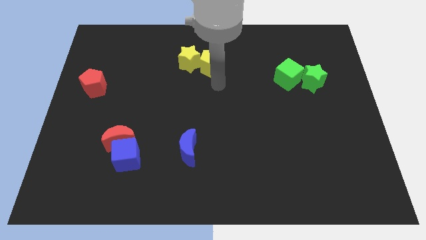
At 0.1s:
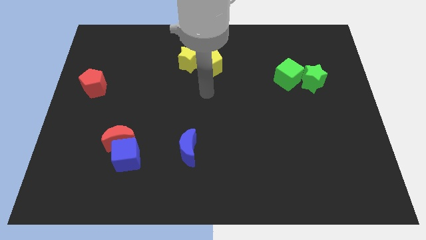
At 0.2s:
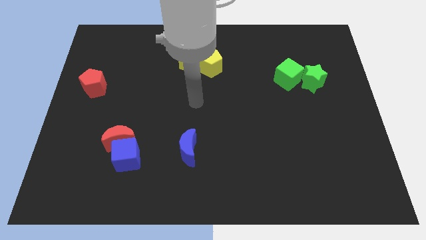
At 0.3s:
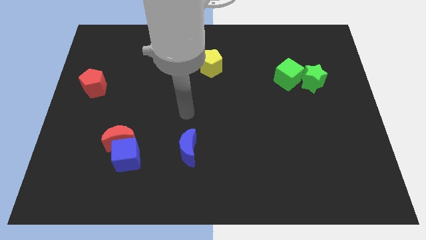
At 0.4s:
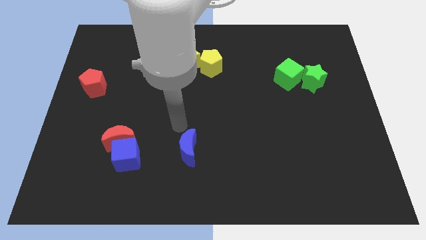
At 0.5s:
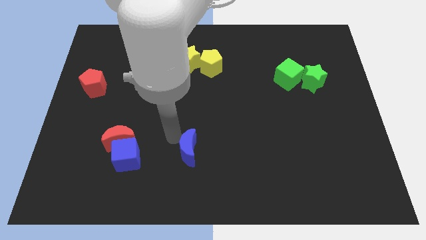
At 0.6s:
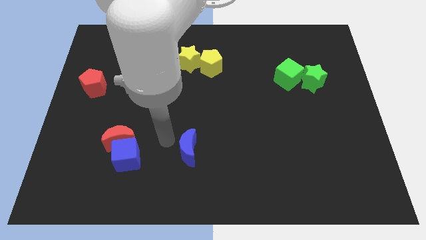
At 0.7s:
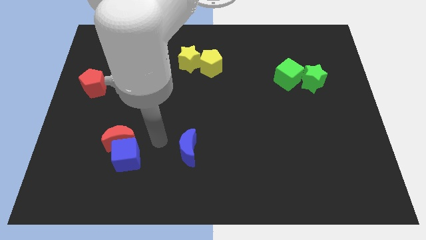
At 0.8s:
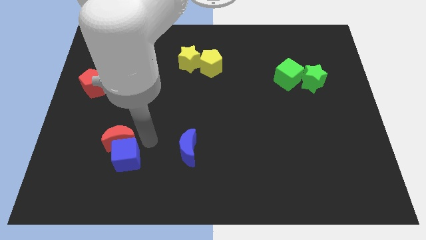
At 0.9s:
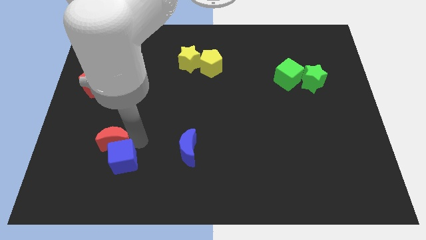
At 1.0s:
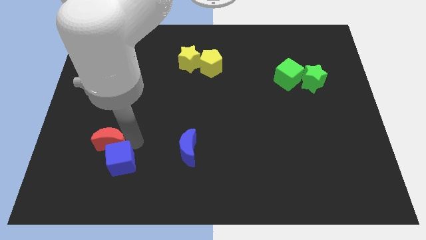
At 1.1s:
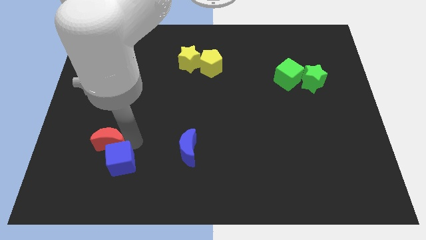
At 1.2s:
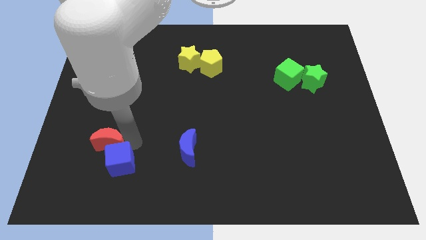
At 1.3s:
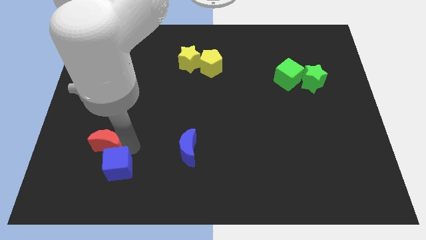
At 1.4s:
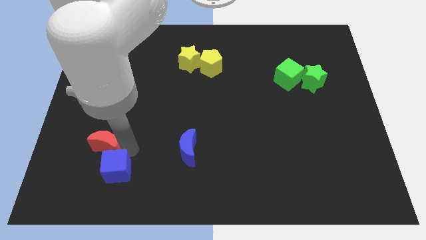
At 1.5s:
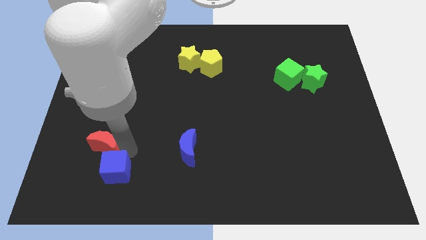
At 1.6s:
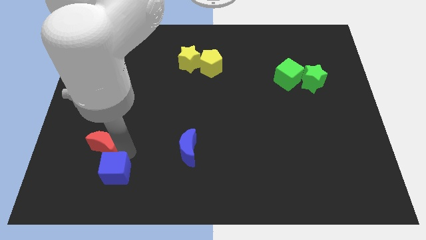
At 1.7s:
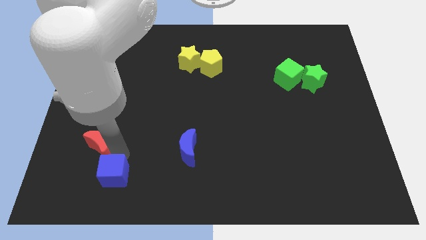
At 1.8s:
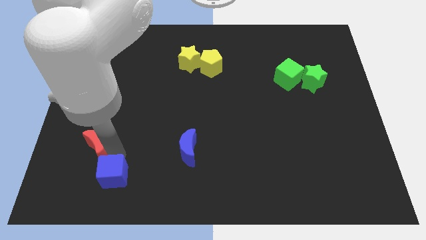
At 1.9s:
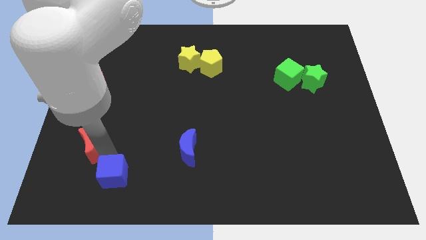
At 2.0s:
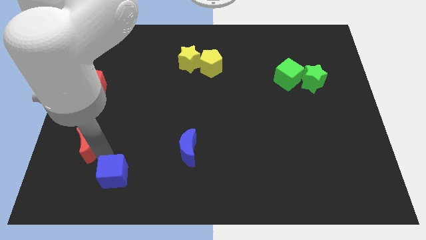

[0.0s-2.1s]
separate the blue cube and the red crescent

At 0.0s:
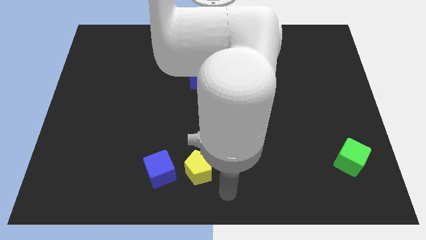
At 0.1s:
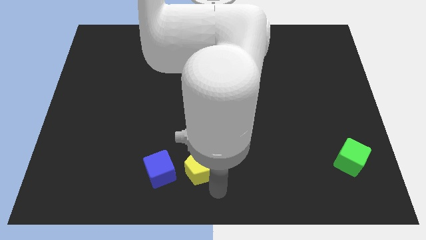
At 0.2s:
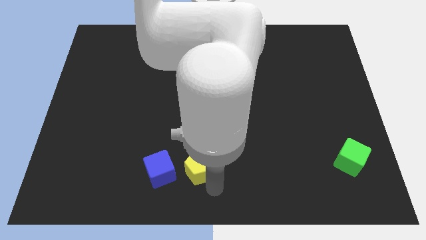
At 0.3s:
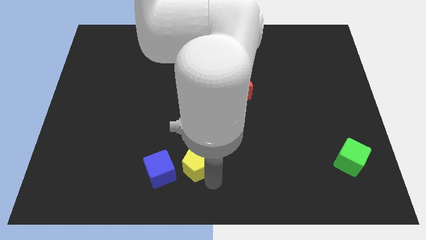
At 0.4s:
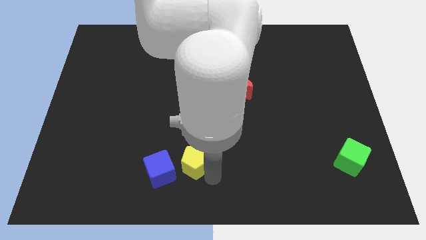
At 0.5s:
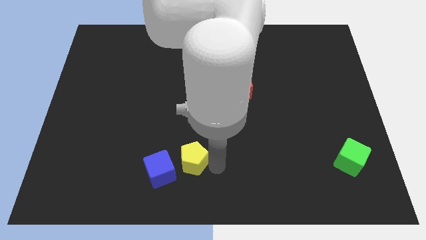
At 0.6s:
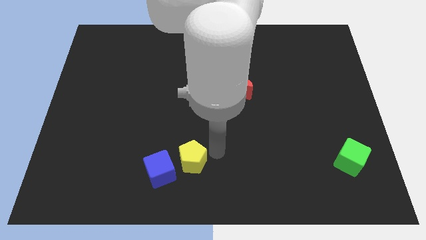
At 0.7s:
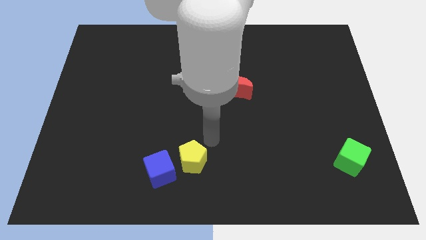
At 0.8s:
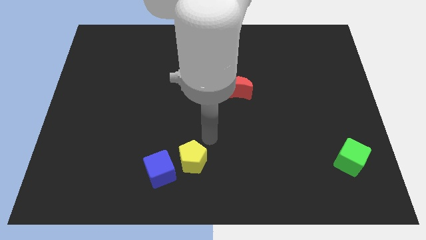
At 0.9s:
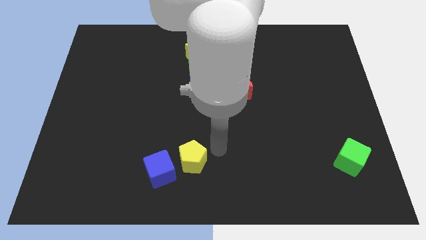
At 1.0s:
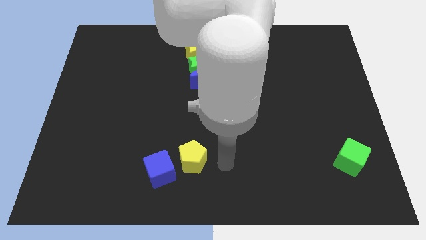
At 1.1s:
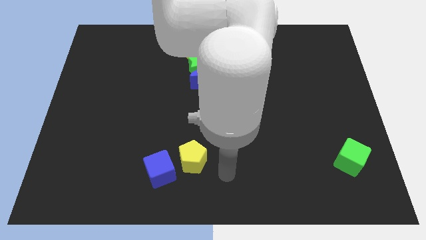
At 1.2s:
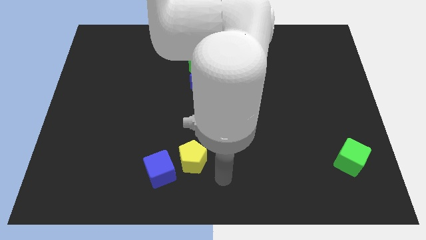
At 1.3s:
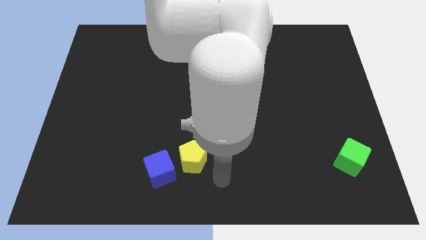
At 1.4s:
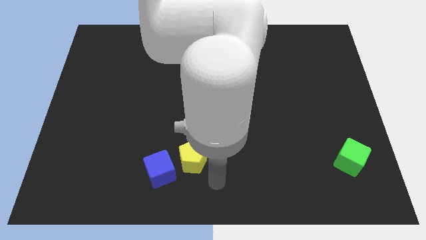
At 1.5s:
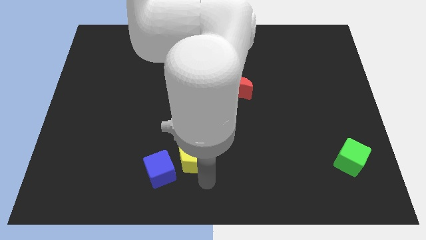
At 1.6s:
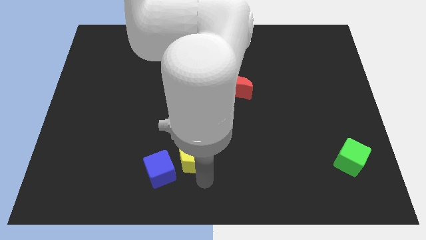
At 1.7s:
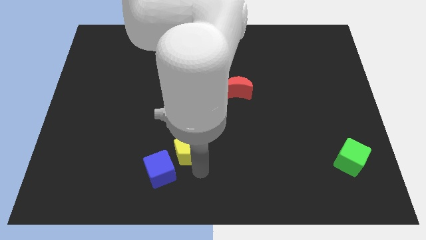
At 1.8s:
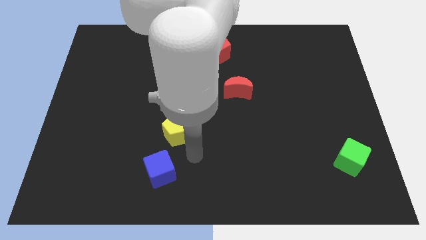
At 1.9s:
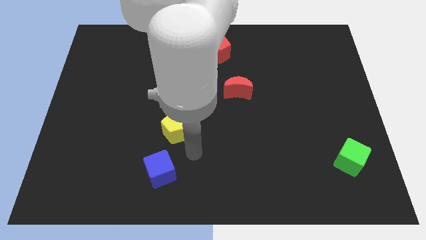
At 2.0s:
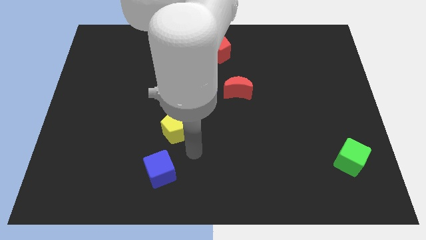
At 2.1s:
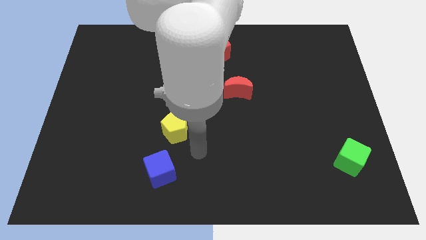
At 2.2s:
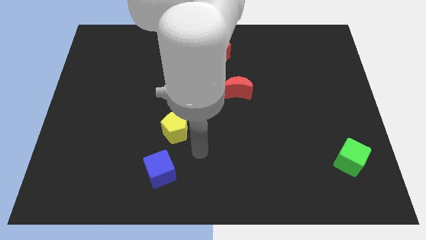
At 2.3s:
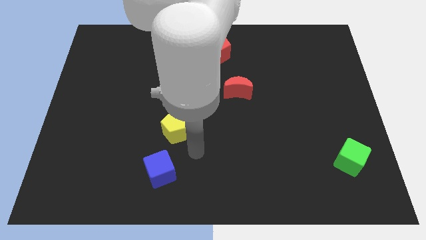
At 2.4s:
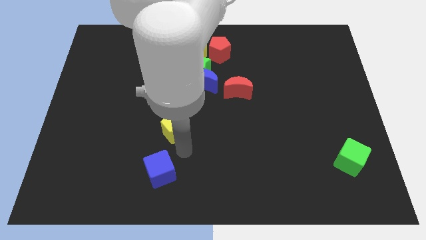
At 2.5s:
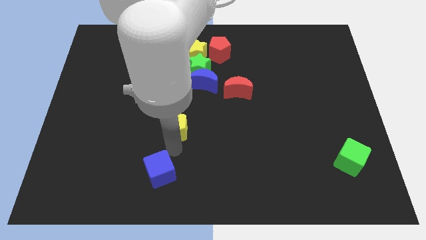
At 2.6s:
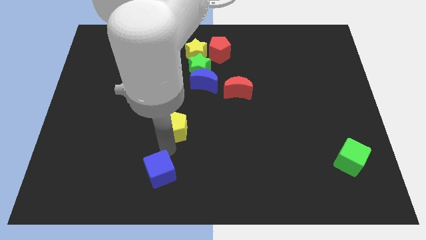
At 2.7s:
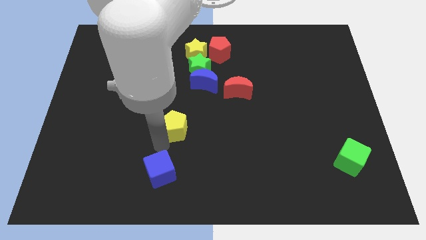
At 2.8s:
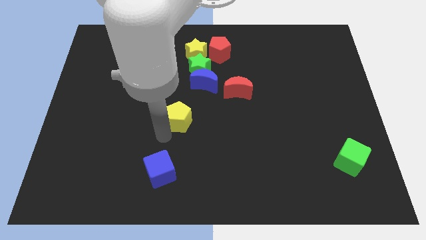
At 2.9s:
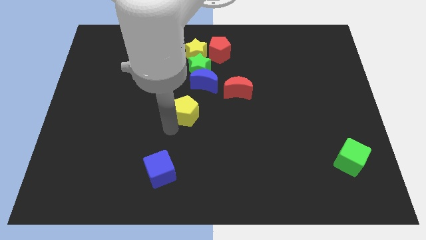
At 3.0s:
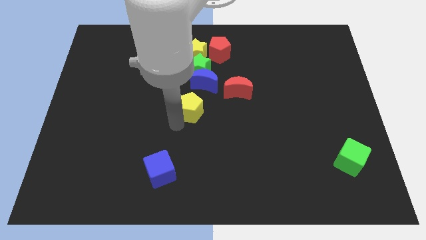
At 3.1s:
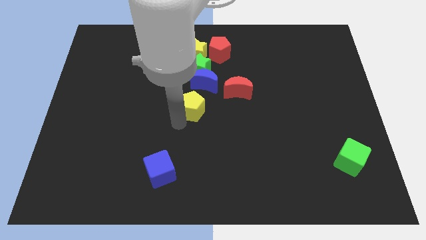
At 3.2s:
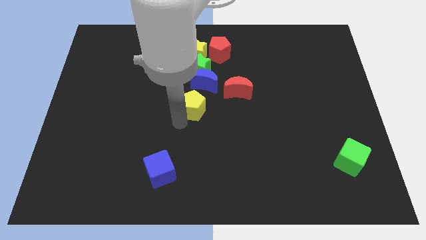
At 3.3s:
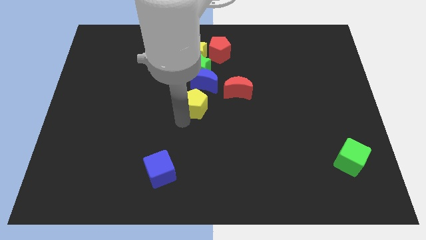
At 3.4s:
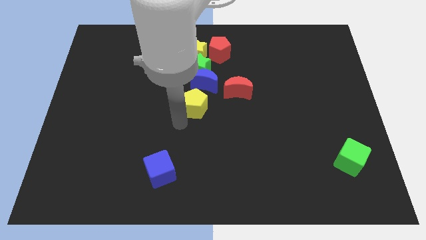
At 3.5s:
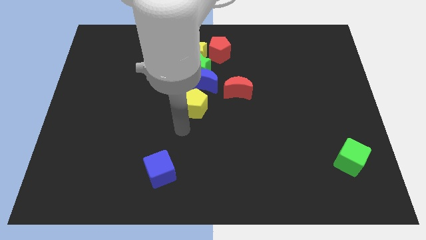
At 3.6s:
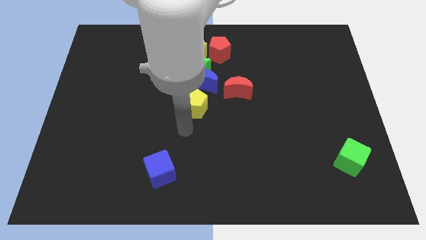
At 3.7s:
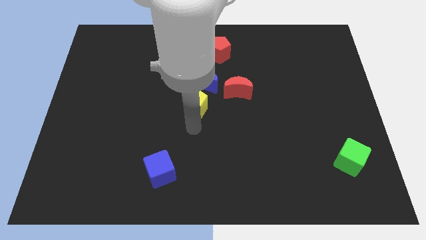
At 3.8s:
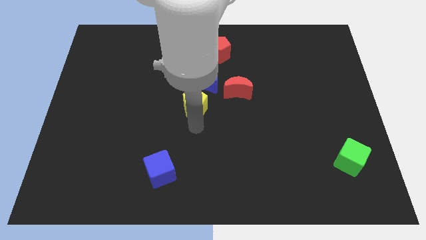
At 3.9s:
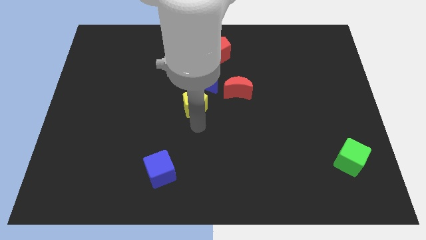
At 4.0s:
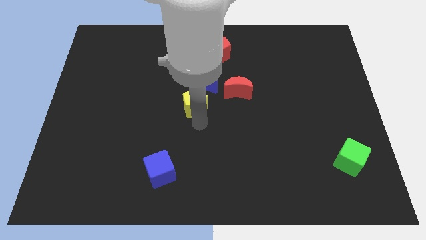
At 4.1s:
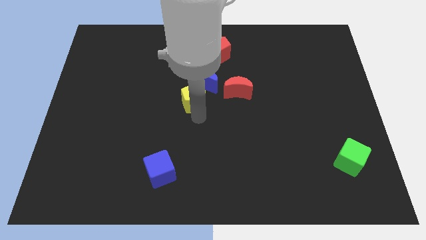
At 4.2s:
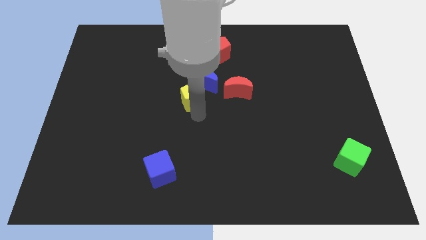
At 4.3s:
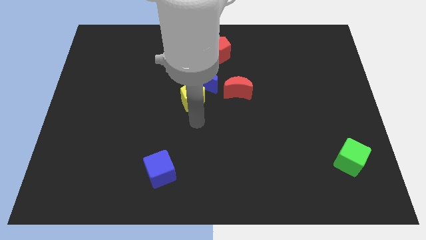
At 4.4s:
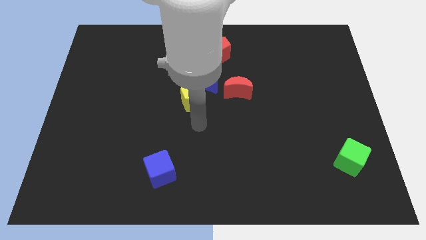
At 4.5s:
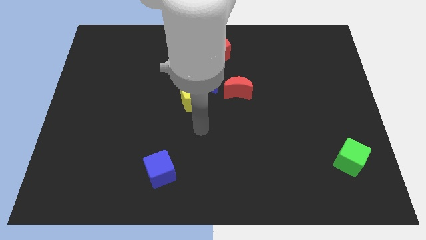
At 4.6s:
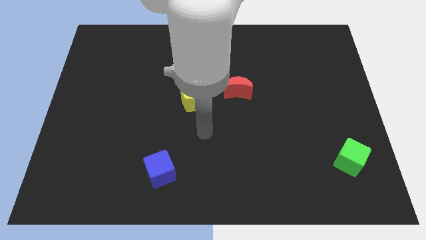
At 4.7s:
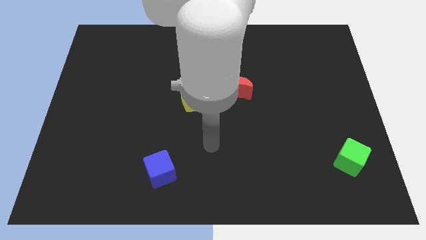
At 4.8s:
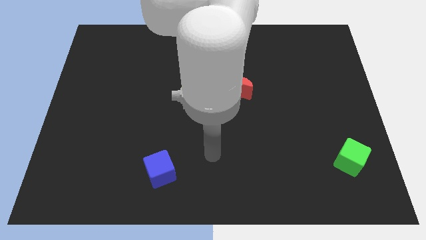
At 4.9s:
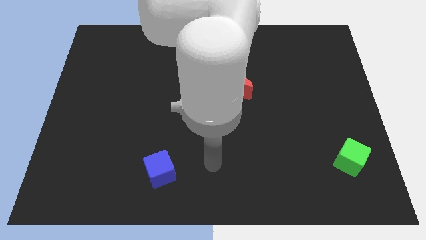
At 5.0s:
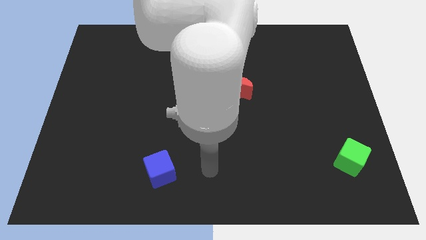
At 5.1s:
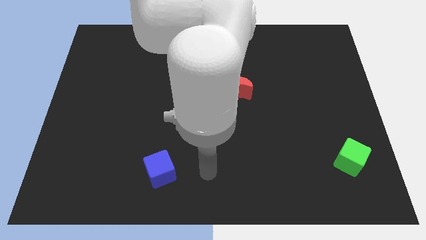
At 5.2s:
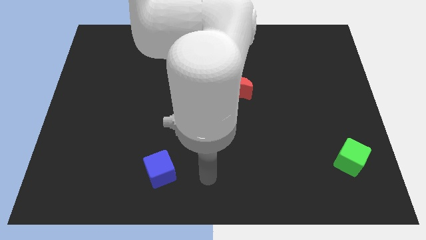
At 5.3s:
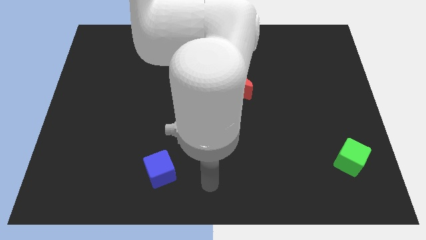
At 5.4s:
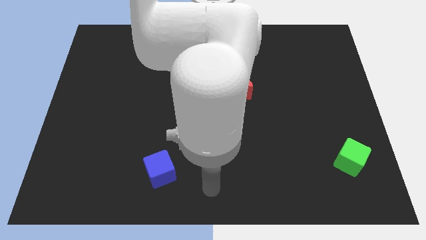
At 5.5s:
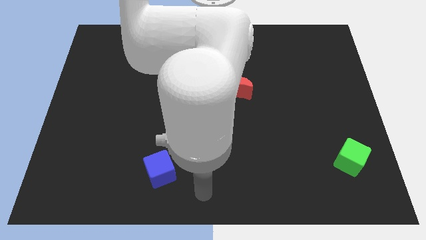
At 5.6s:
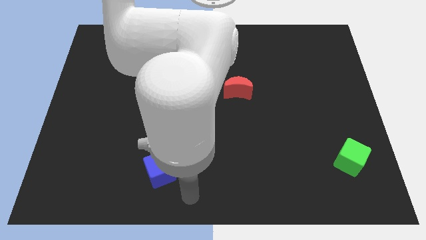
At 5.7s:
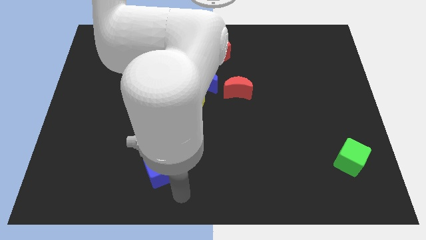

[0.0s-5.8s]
place yellow pentagon close to blue crescent

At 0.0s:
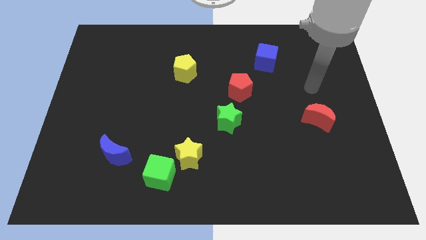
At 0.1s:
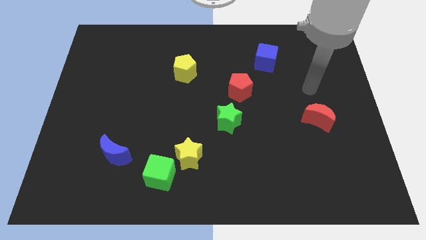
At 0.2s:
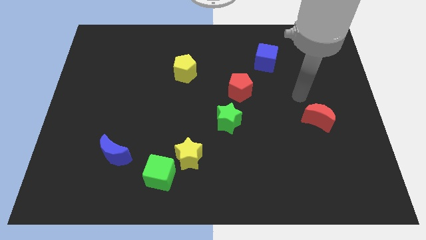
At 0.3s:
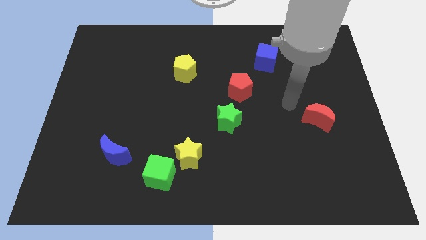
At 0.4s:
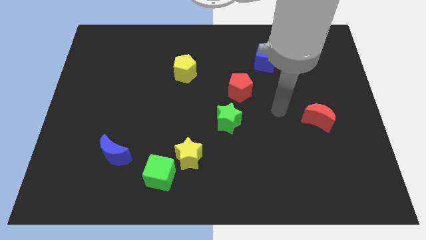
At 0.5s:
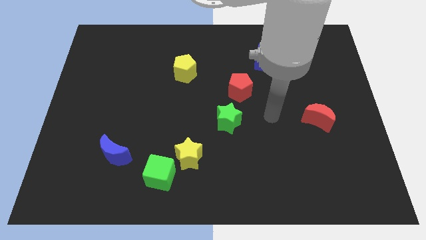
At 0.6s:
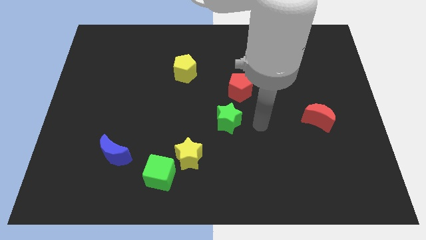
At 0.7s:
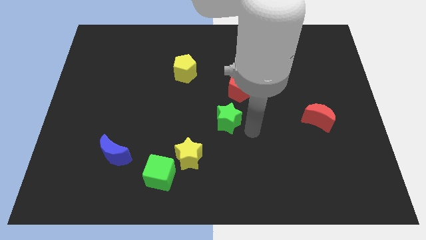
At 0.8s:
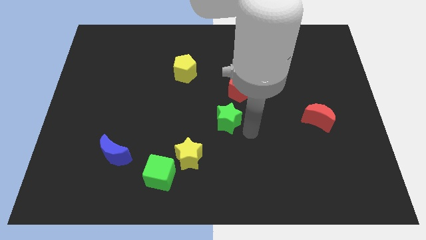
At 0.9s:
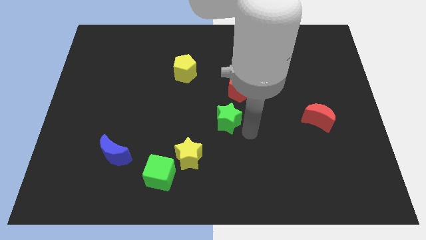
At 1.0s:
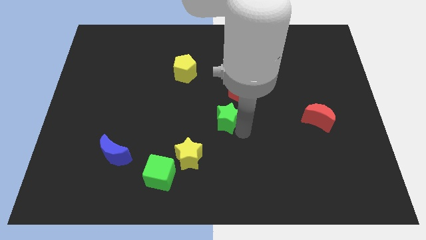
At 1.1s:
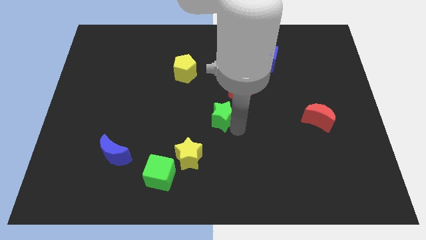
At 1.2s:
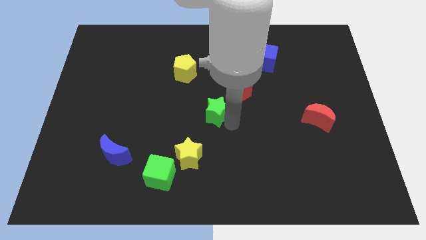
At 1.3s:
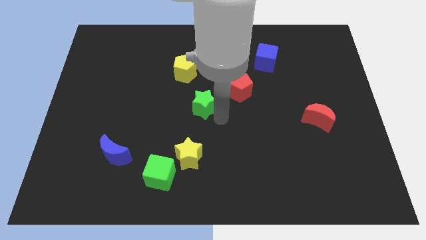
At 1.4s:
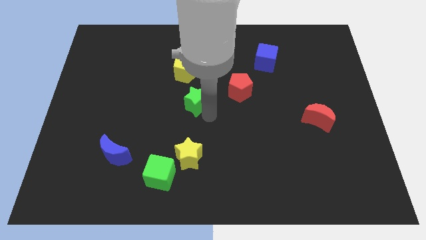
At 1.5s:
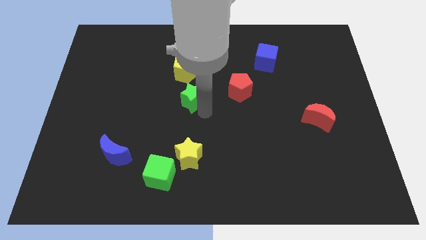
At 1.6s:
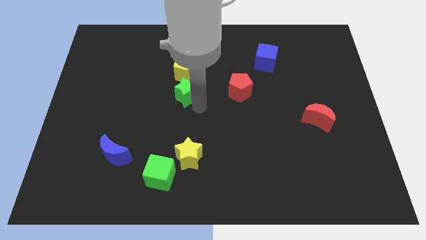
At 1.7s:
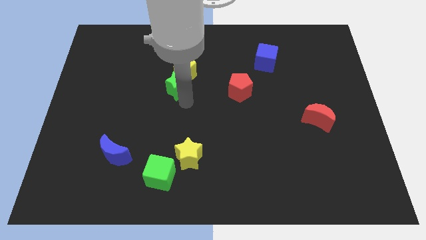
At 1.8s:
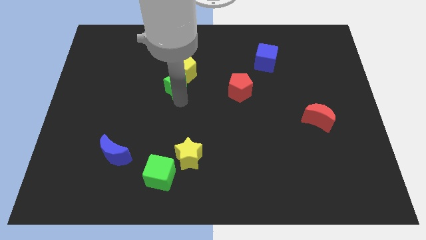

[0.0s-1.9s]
push the green star towards the yellow pentagon
